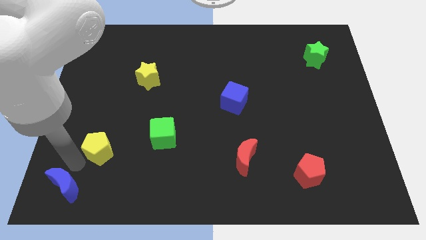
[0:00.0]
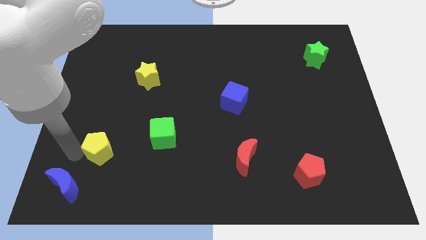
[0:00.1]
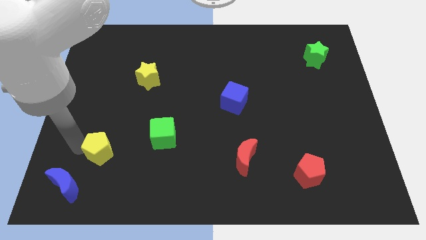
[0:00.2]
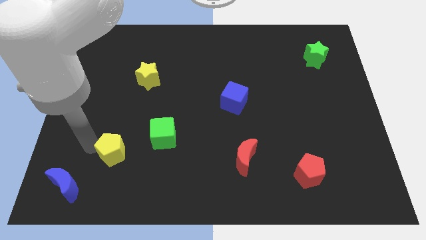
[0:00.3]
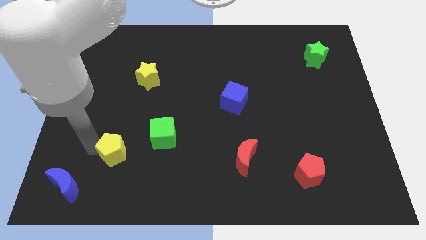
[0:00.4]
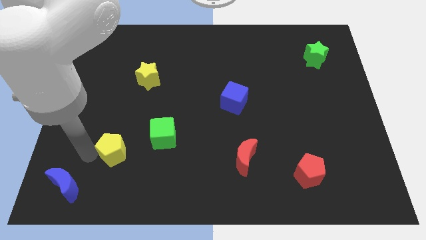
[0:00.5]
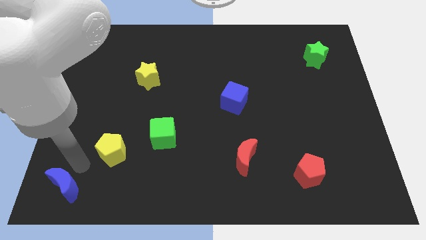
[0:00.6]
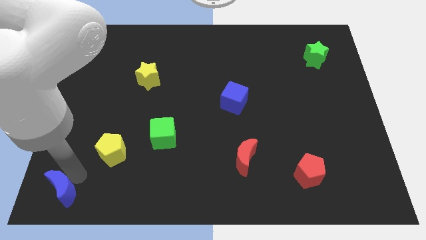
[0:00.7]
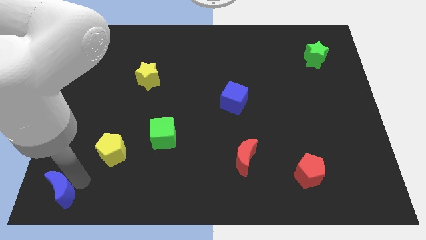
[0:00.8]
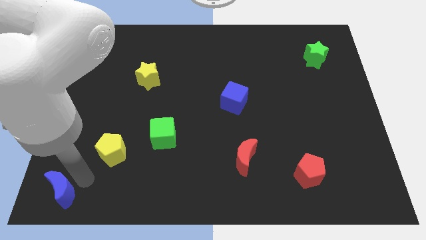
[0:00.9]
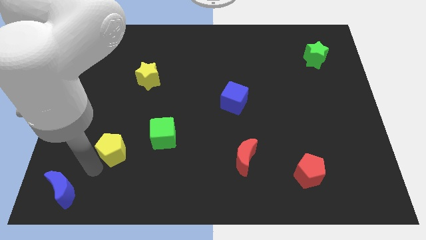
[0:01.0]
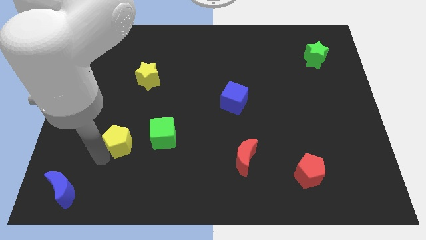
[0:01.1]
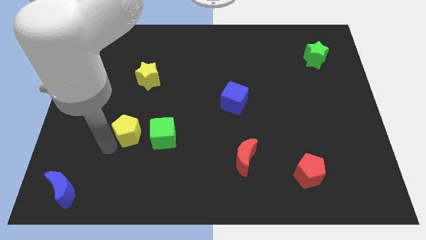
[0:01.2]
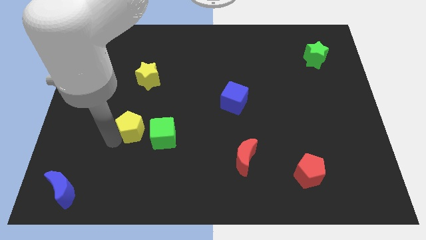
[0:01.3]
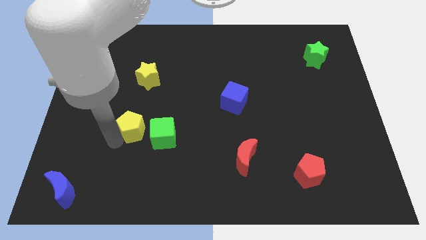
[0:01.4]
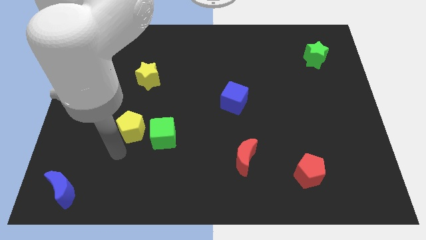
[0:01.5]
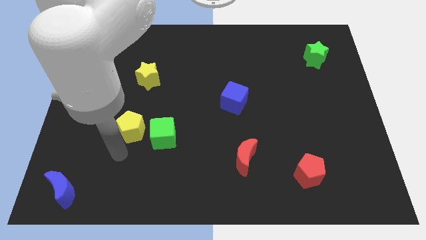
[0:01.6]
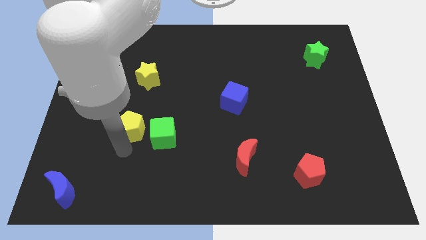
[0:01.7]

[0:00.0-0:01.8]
place yellow pentagon to the left of the green cube

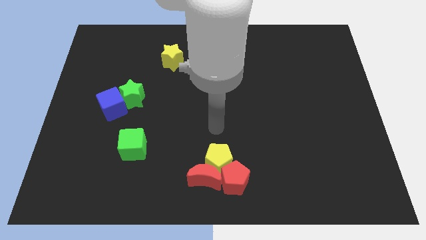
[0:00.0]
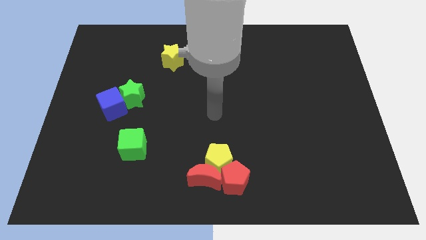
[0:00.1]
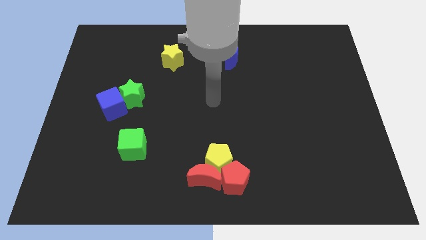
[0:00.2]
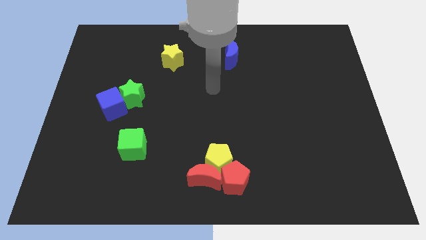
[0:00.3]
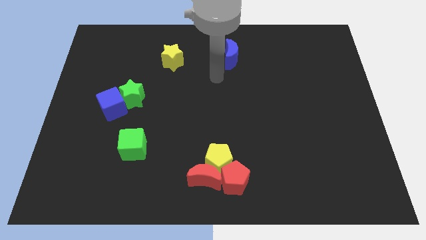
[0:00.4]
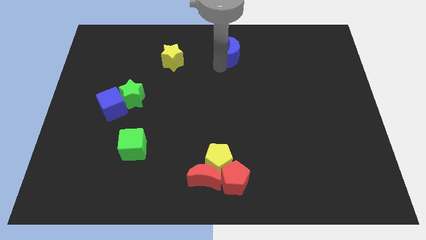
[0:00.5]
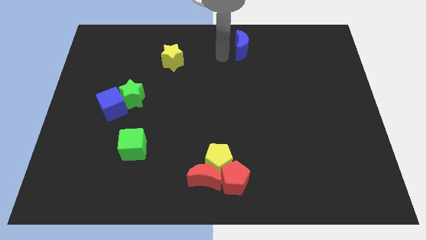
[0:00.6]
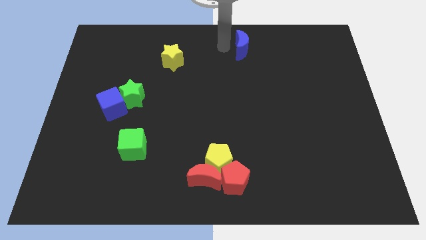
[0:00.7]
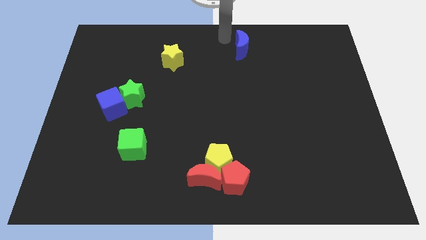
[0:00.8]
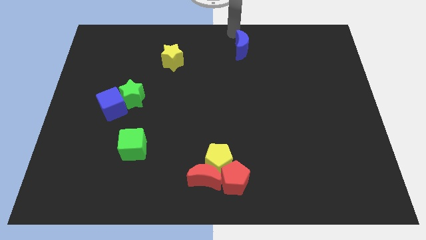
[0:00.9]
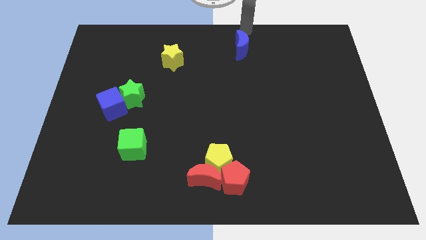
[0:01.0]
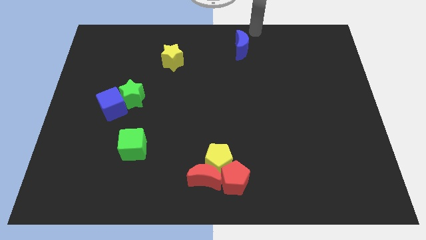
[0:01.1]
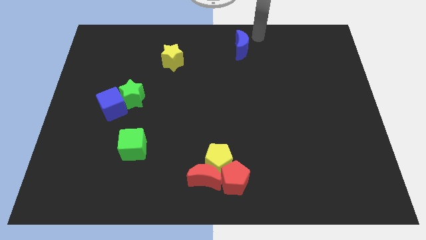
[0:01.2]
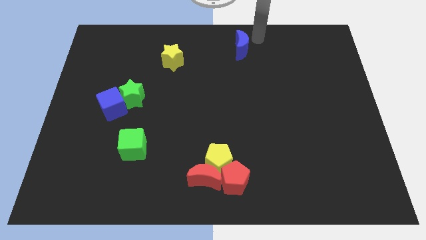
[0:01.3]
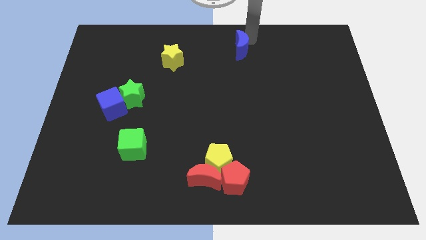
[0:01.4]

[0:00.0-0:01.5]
move your arm to the top of the blue crescent

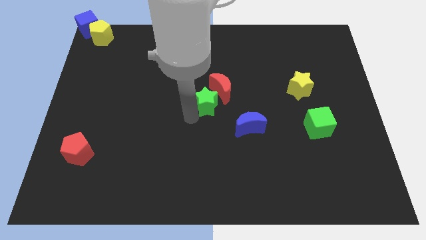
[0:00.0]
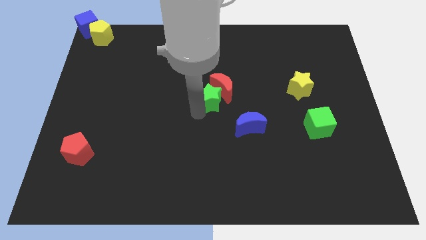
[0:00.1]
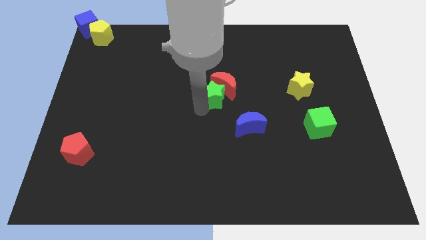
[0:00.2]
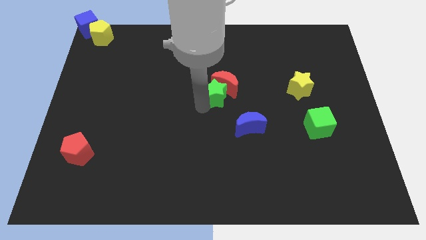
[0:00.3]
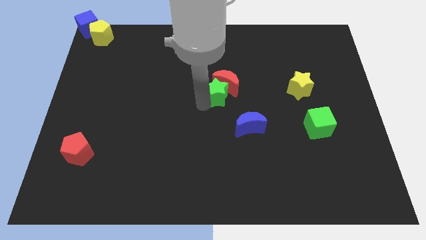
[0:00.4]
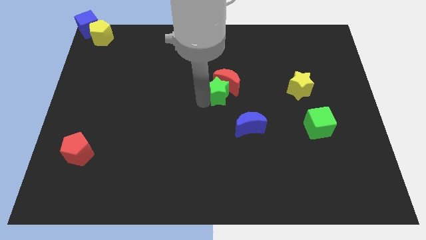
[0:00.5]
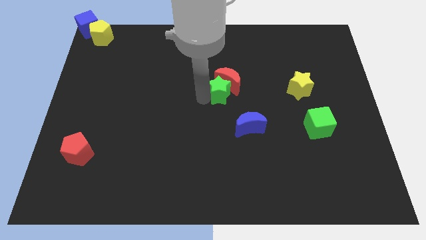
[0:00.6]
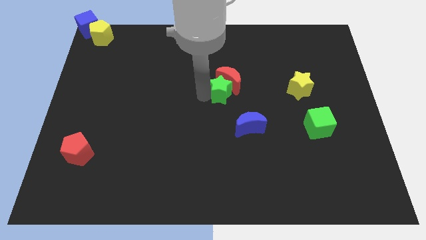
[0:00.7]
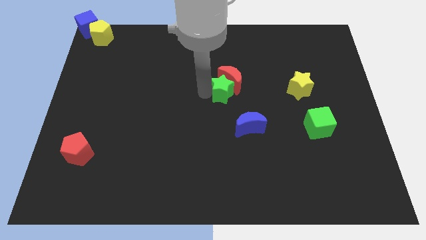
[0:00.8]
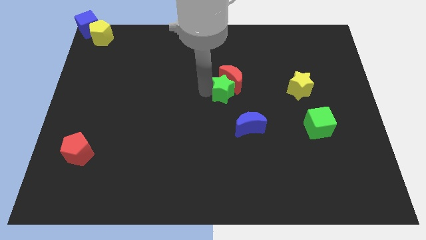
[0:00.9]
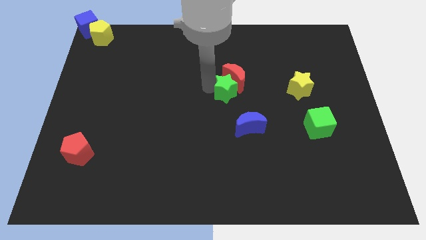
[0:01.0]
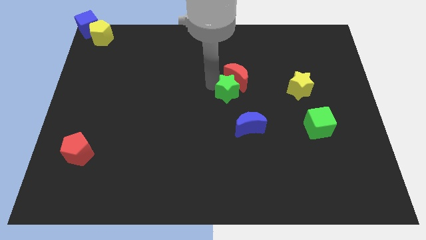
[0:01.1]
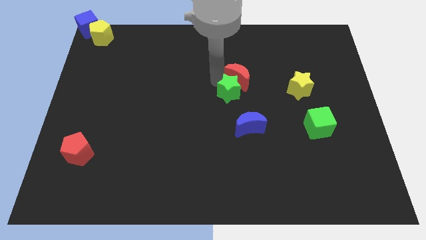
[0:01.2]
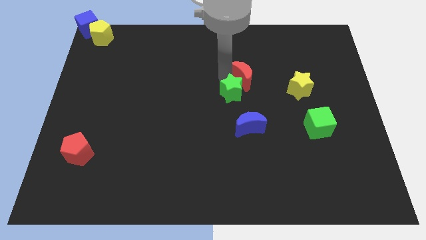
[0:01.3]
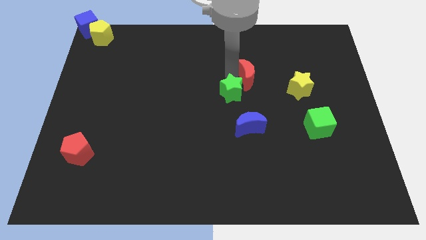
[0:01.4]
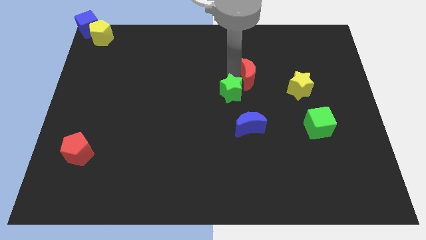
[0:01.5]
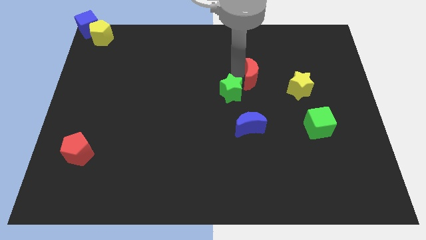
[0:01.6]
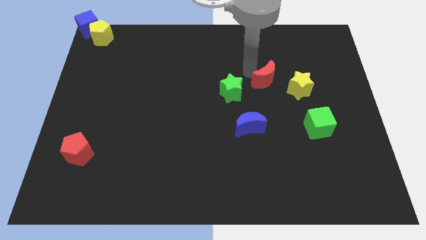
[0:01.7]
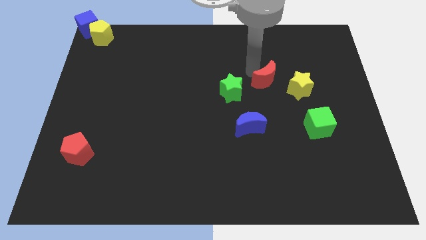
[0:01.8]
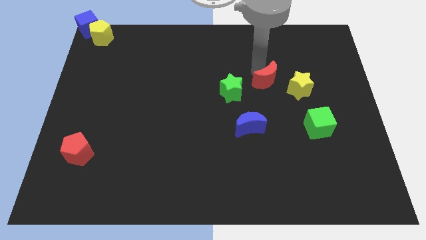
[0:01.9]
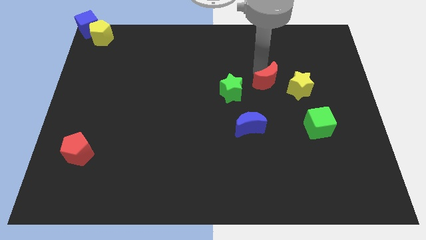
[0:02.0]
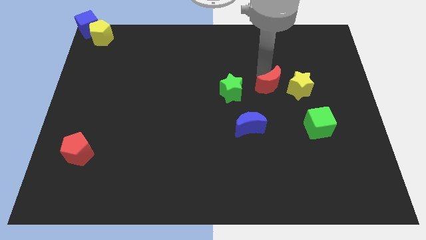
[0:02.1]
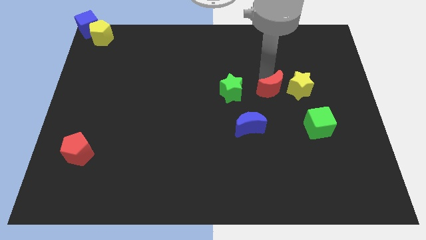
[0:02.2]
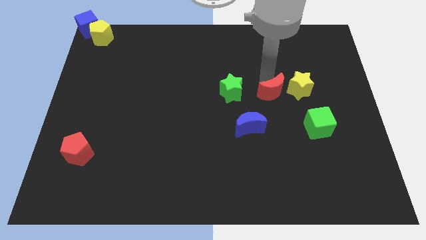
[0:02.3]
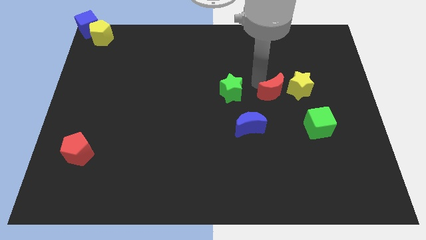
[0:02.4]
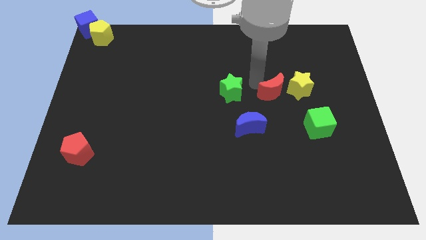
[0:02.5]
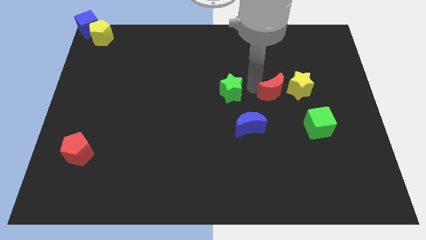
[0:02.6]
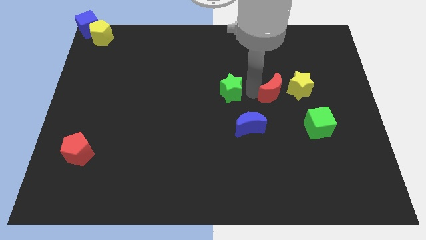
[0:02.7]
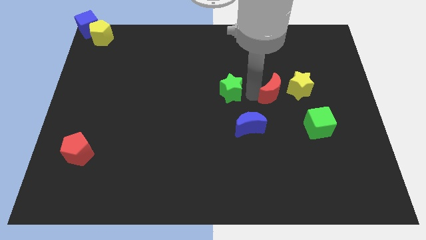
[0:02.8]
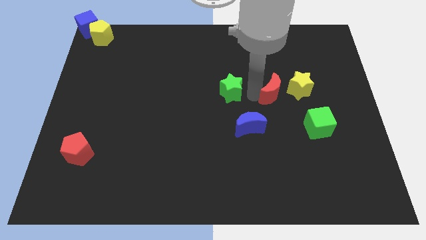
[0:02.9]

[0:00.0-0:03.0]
move the green star and the red moon slightly to the right

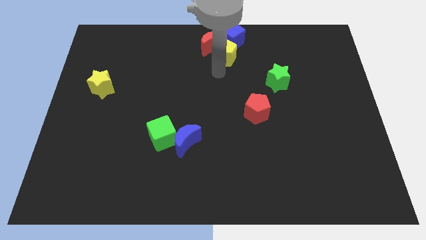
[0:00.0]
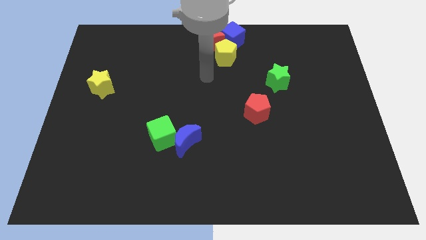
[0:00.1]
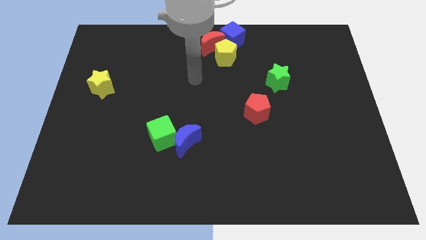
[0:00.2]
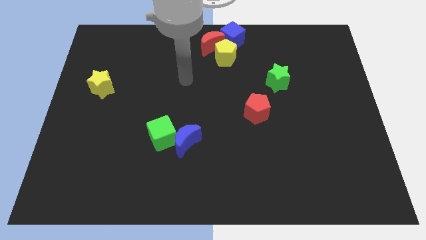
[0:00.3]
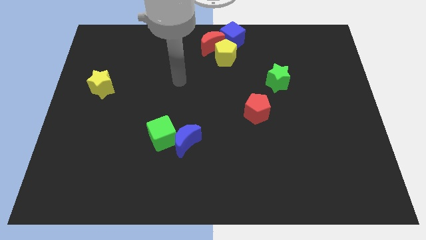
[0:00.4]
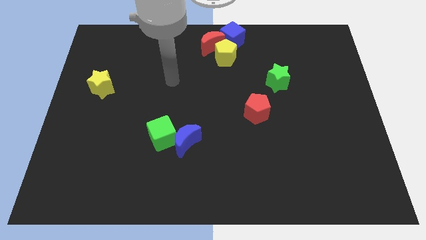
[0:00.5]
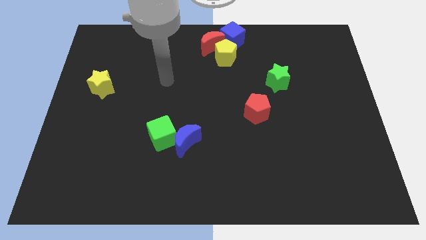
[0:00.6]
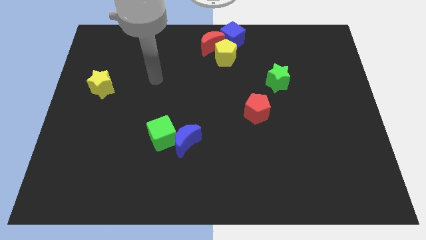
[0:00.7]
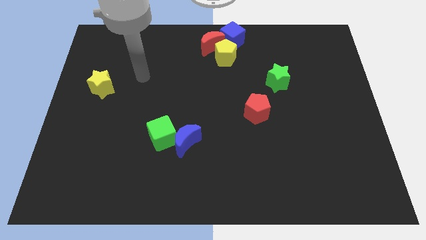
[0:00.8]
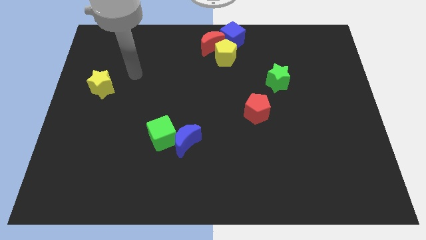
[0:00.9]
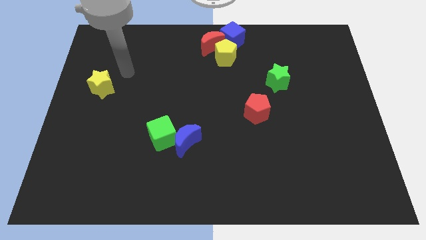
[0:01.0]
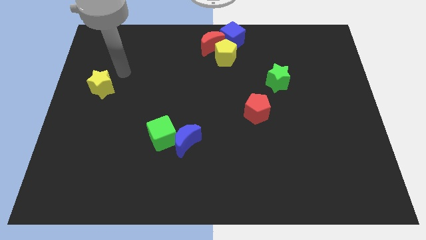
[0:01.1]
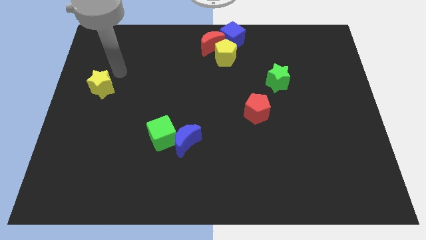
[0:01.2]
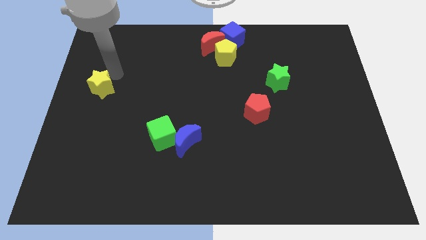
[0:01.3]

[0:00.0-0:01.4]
move your arm towards the yellow star

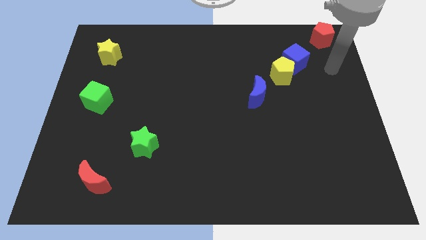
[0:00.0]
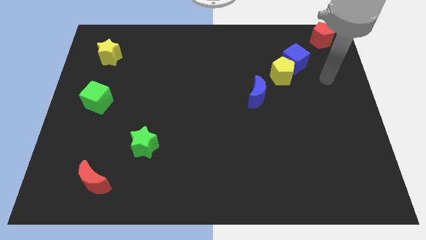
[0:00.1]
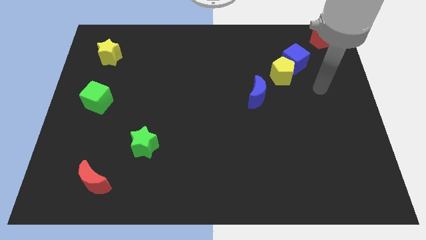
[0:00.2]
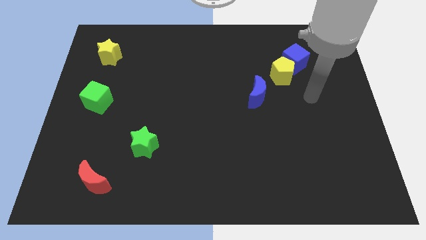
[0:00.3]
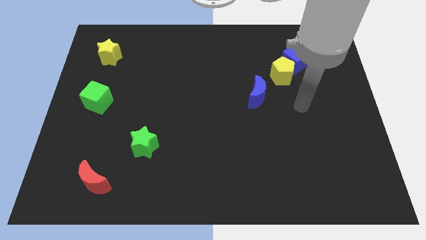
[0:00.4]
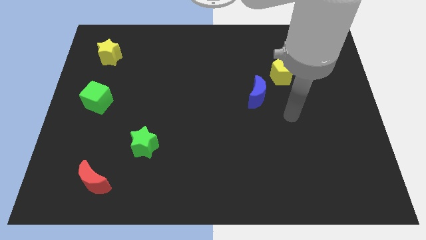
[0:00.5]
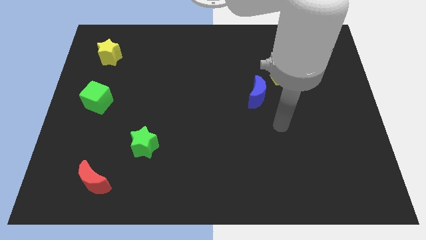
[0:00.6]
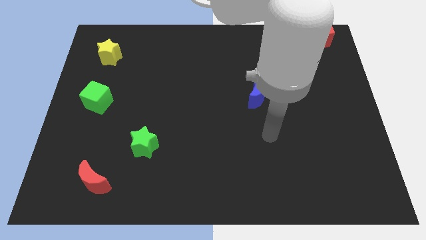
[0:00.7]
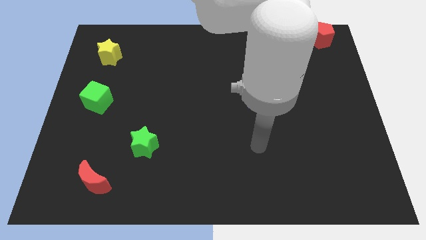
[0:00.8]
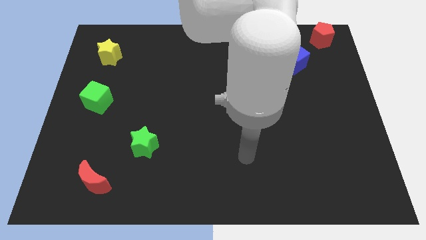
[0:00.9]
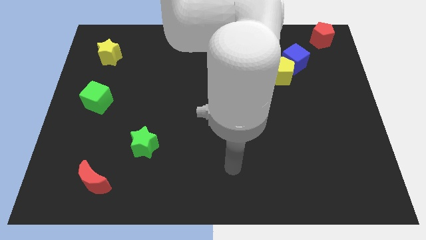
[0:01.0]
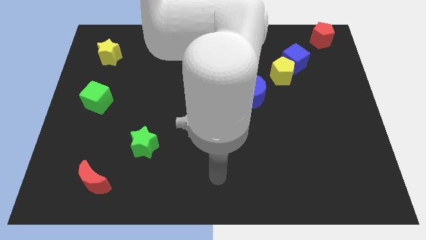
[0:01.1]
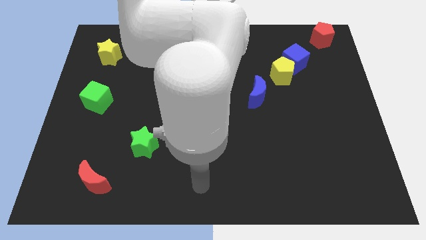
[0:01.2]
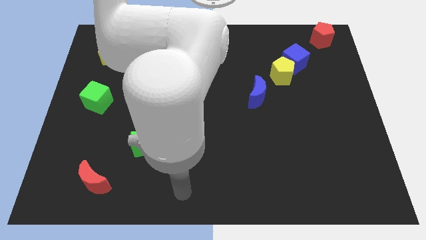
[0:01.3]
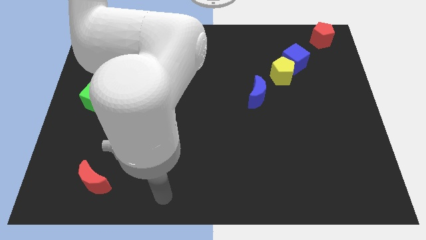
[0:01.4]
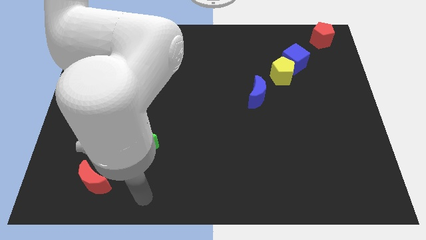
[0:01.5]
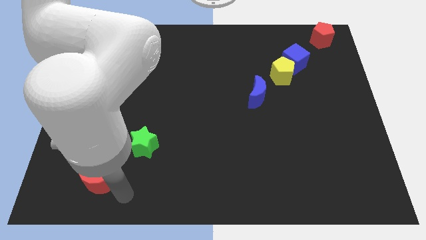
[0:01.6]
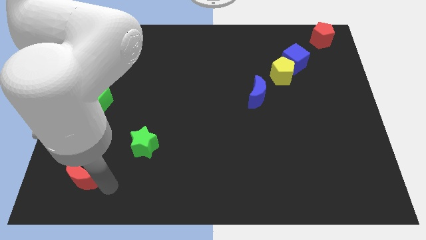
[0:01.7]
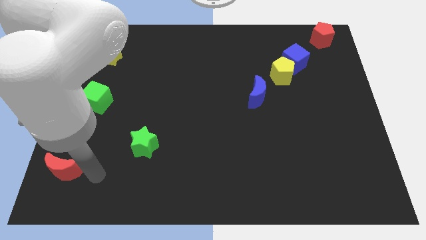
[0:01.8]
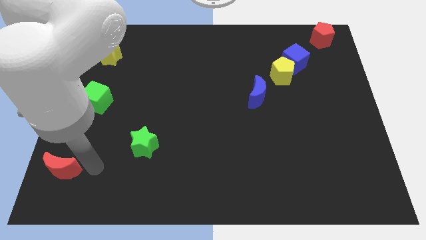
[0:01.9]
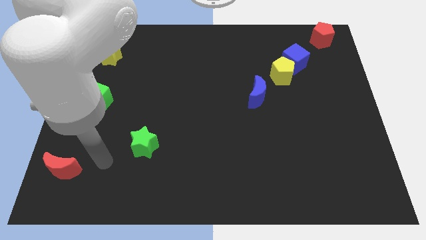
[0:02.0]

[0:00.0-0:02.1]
go and push the red crescent to the bottom left
